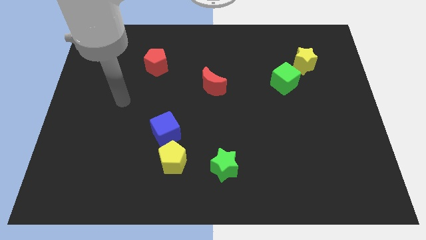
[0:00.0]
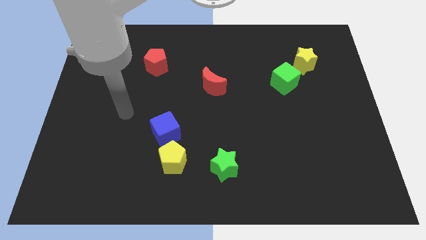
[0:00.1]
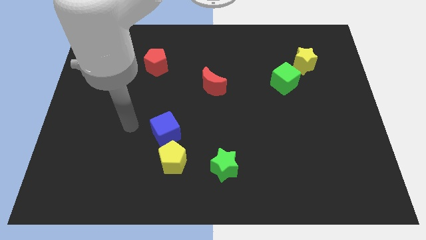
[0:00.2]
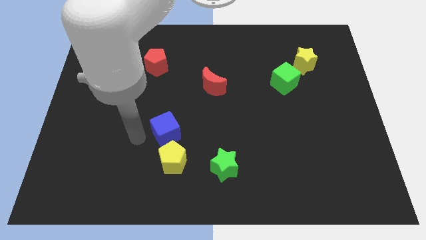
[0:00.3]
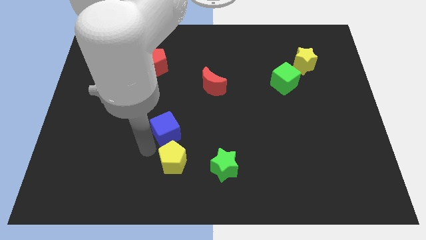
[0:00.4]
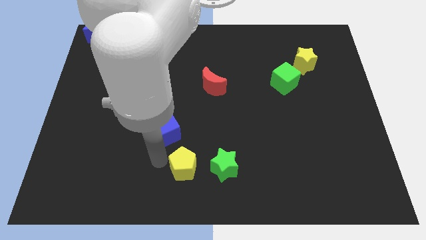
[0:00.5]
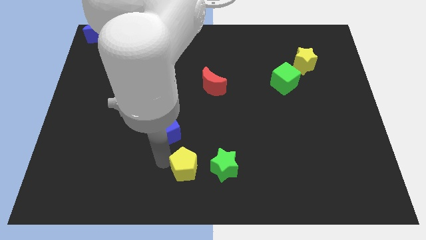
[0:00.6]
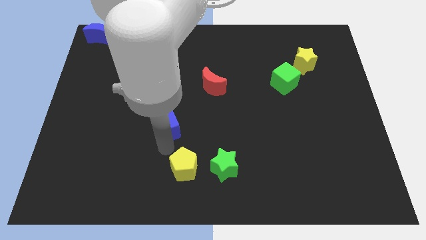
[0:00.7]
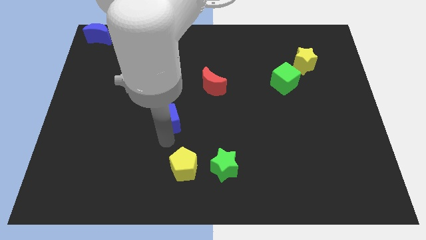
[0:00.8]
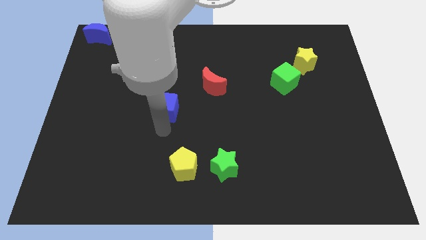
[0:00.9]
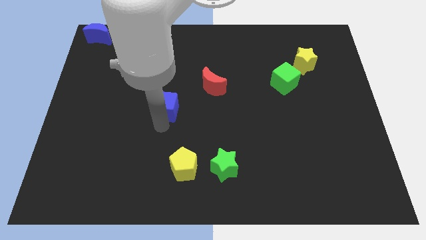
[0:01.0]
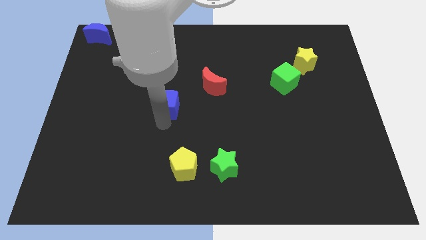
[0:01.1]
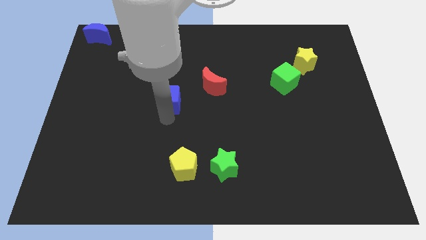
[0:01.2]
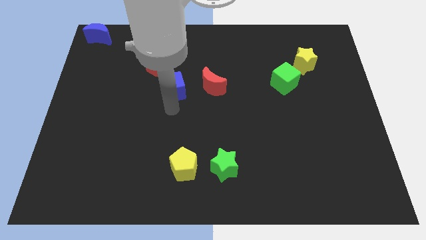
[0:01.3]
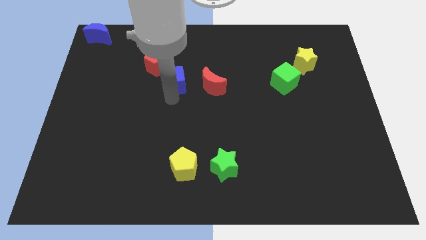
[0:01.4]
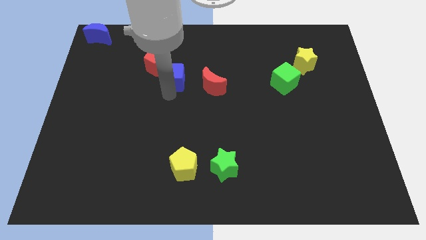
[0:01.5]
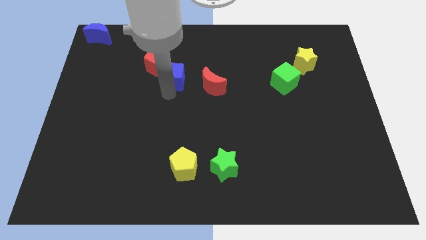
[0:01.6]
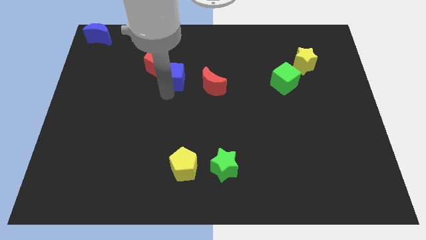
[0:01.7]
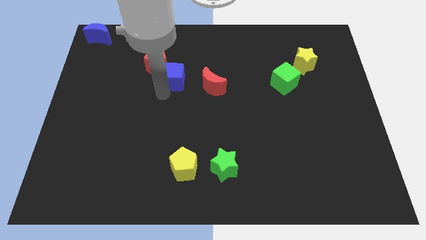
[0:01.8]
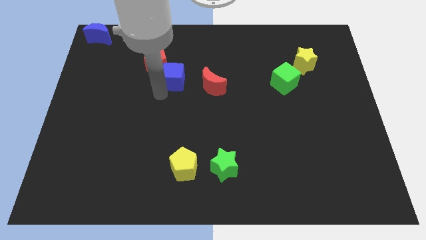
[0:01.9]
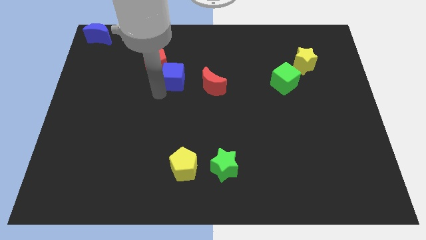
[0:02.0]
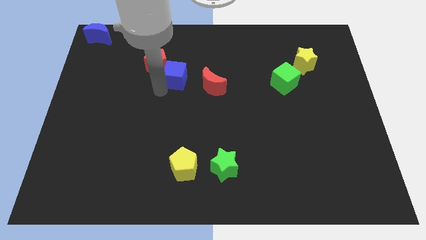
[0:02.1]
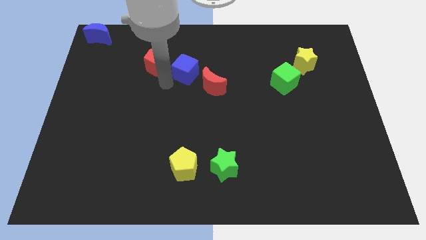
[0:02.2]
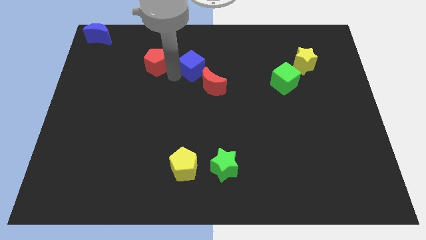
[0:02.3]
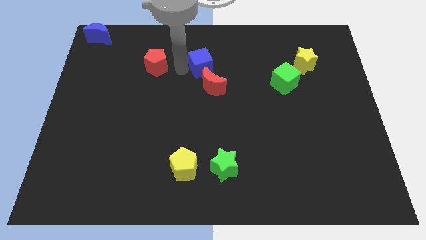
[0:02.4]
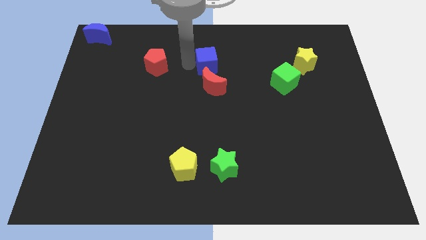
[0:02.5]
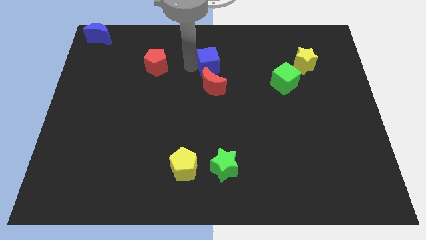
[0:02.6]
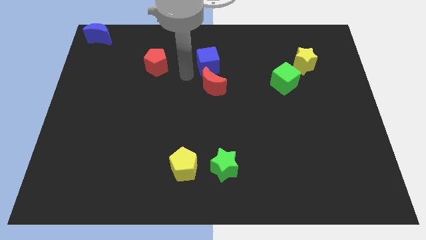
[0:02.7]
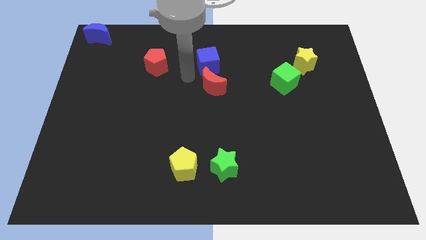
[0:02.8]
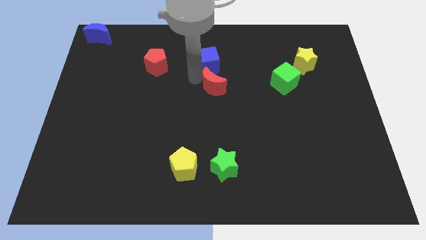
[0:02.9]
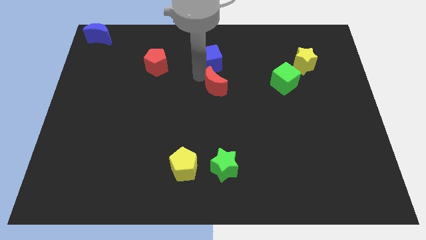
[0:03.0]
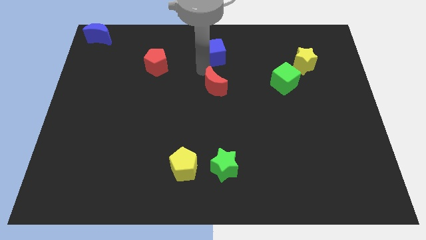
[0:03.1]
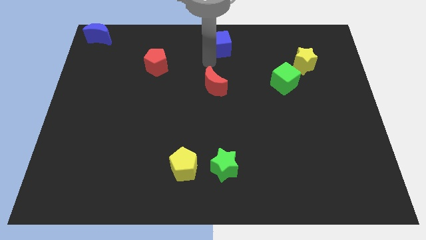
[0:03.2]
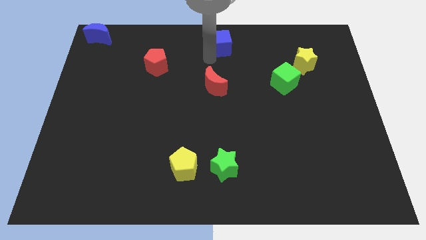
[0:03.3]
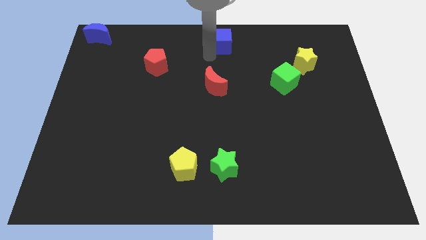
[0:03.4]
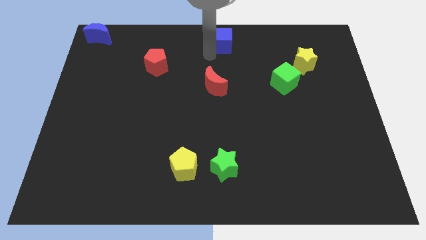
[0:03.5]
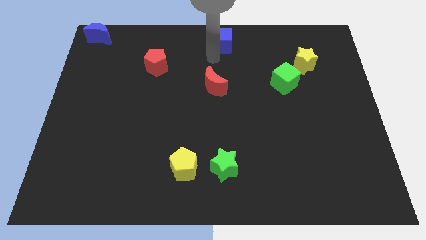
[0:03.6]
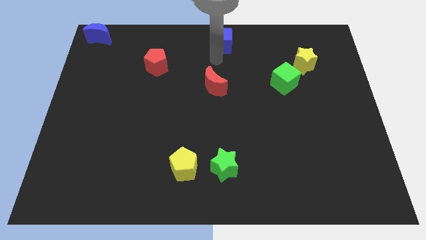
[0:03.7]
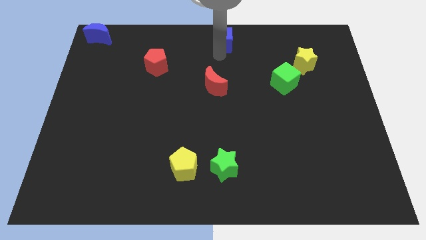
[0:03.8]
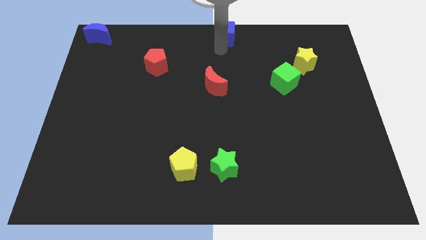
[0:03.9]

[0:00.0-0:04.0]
place the blue cube above the red moon

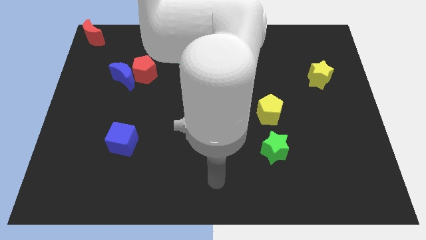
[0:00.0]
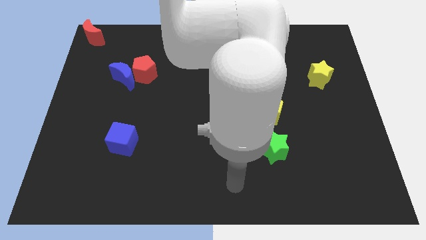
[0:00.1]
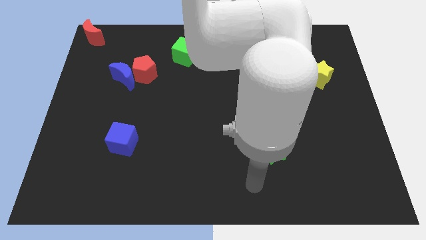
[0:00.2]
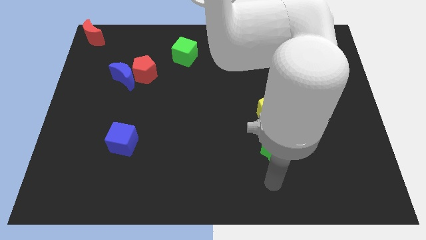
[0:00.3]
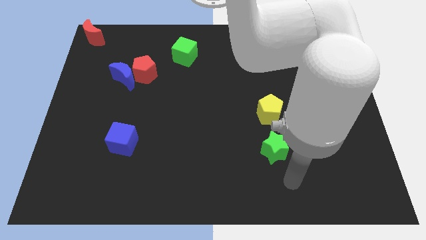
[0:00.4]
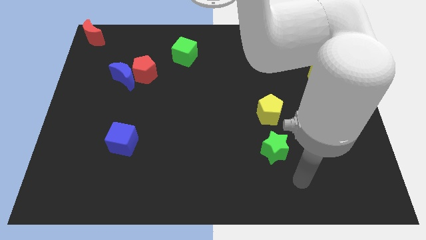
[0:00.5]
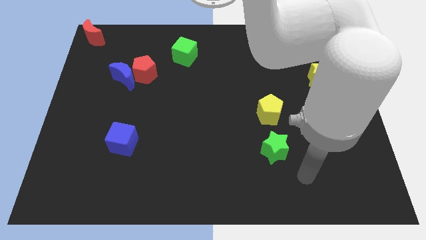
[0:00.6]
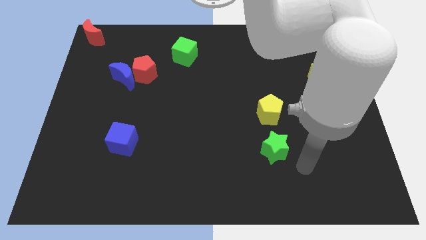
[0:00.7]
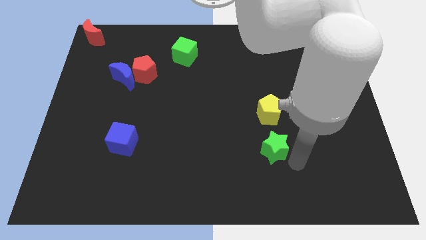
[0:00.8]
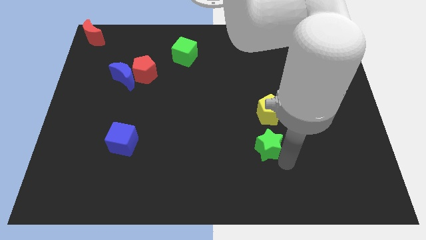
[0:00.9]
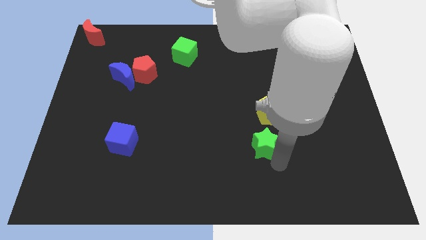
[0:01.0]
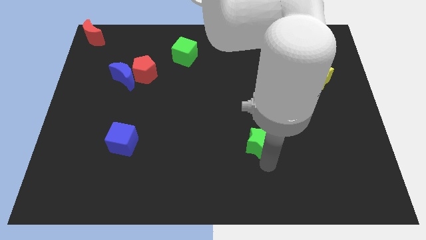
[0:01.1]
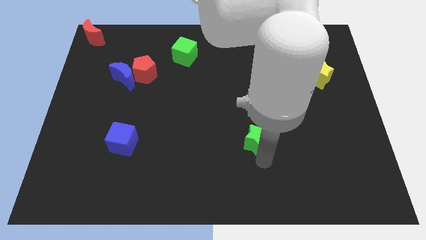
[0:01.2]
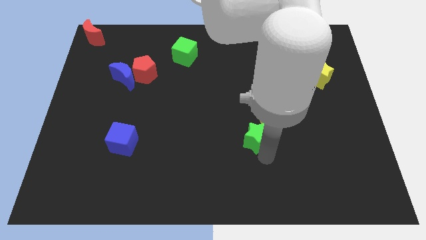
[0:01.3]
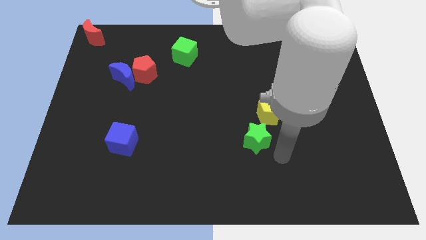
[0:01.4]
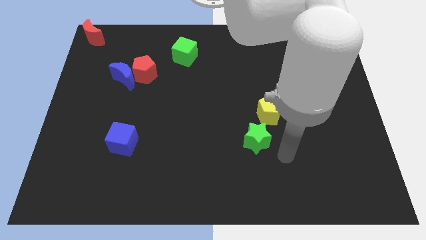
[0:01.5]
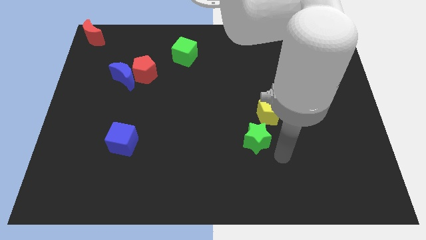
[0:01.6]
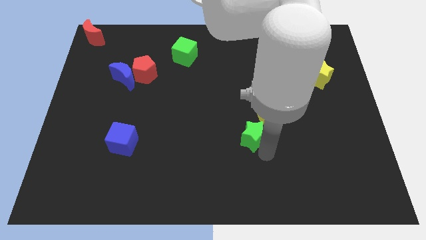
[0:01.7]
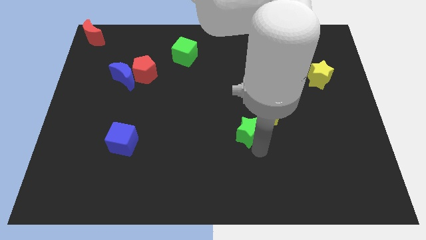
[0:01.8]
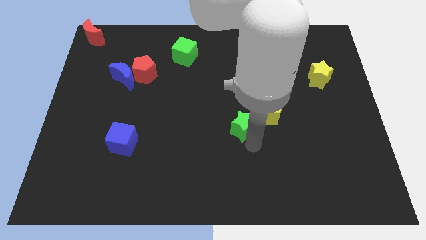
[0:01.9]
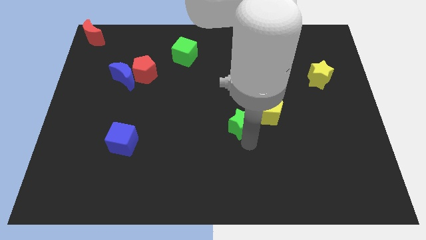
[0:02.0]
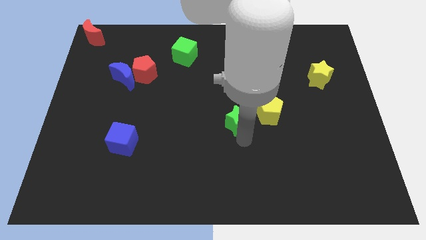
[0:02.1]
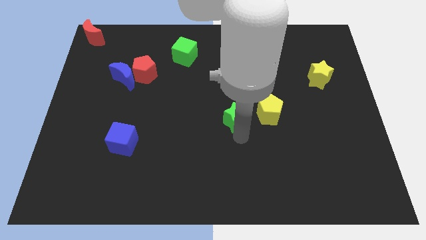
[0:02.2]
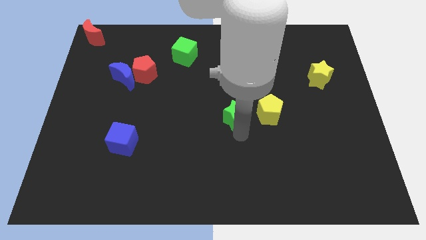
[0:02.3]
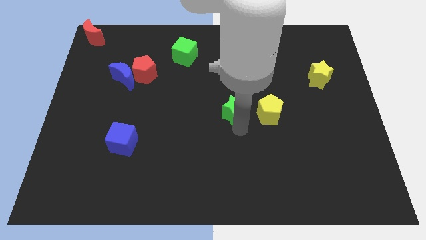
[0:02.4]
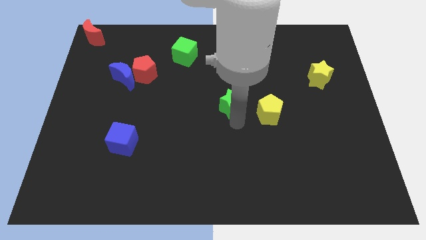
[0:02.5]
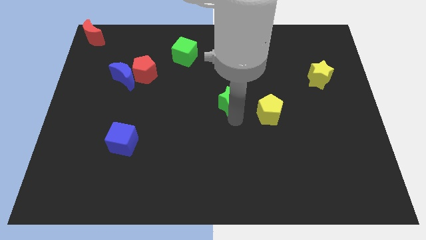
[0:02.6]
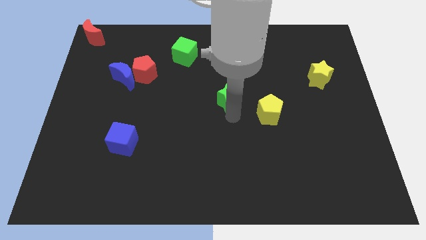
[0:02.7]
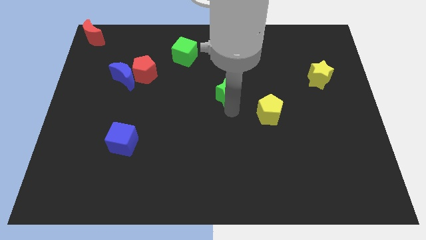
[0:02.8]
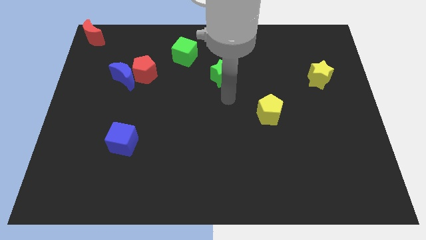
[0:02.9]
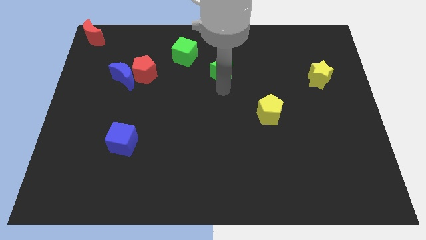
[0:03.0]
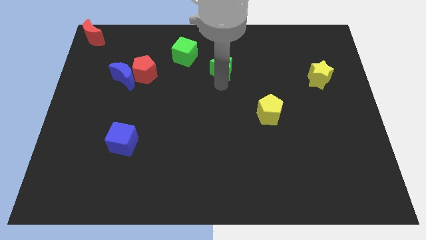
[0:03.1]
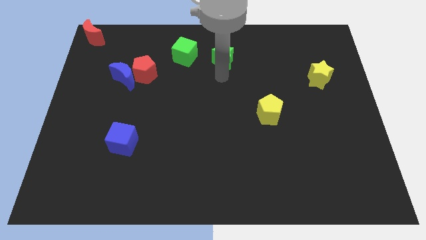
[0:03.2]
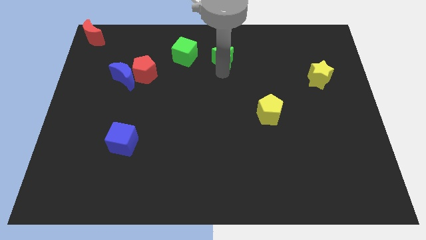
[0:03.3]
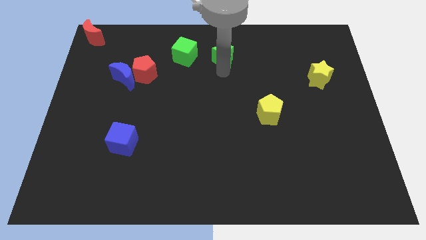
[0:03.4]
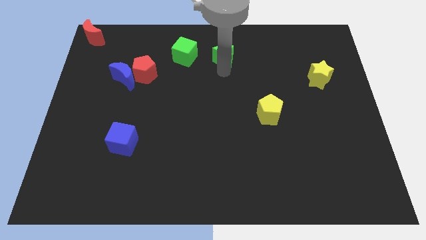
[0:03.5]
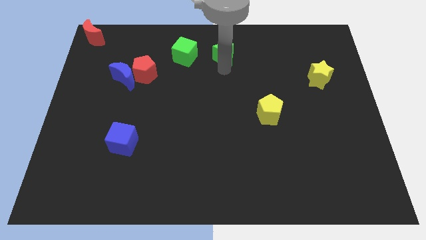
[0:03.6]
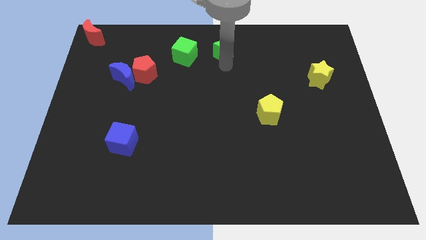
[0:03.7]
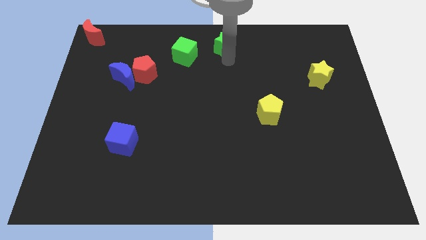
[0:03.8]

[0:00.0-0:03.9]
push the green star to the top center of the board

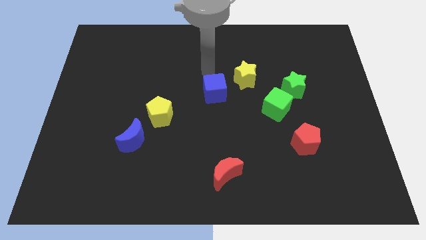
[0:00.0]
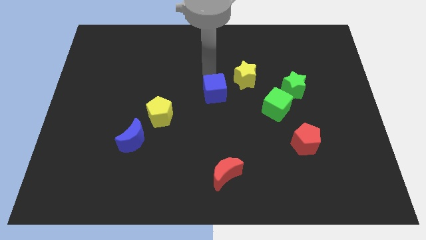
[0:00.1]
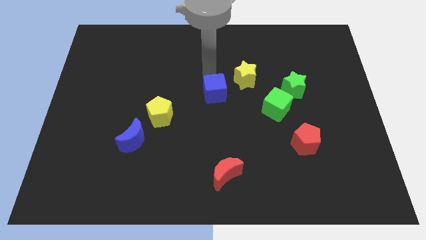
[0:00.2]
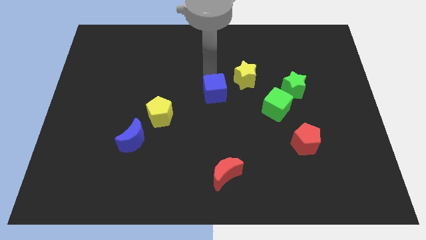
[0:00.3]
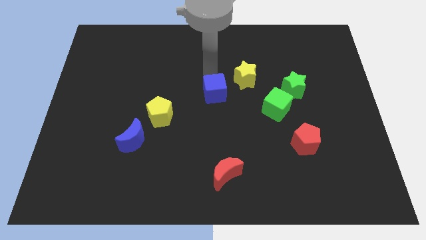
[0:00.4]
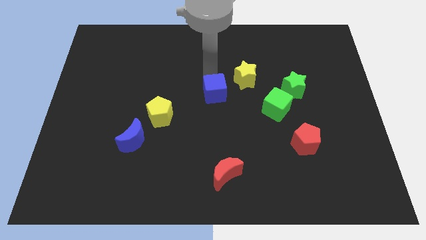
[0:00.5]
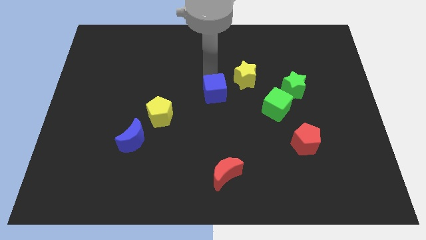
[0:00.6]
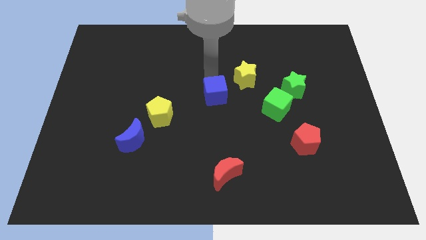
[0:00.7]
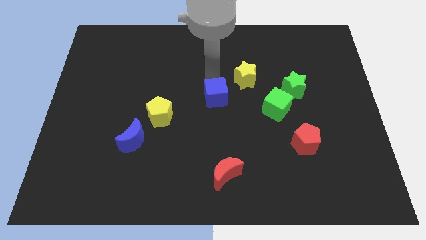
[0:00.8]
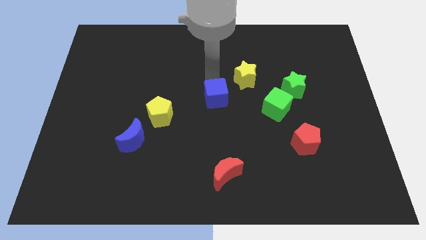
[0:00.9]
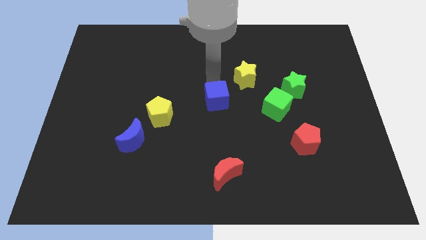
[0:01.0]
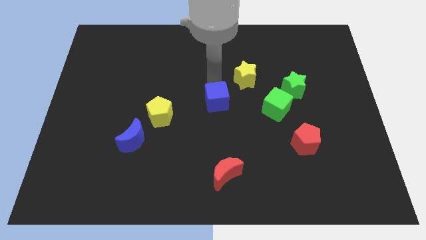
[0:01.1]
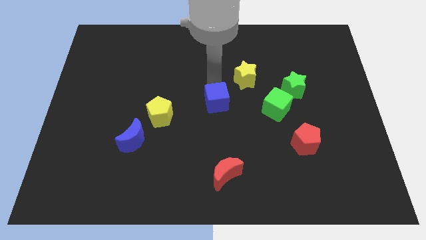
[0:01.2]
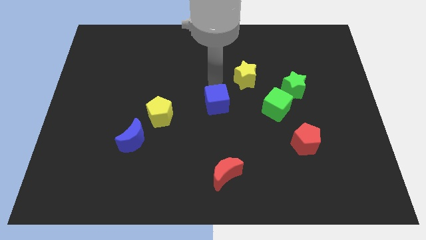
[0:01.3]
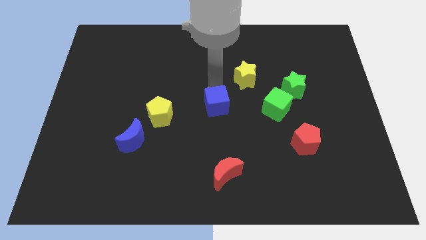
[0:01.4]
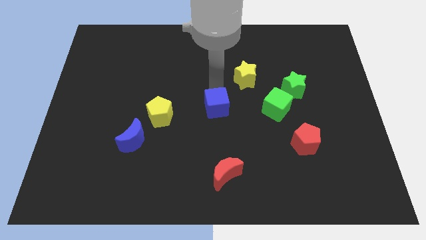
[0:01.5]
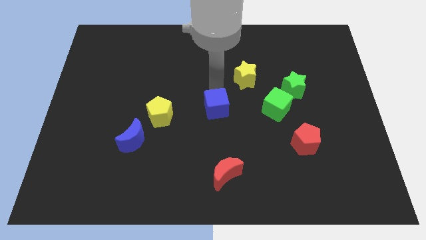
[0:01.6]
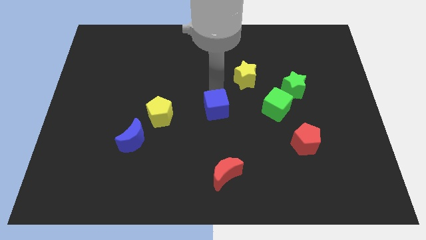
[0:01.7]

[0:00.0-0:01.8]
push the blue cube to the center
